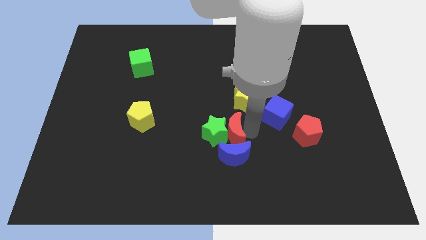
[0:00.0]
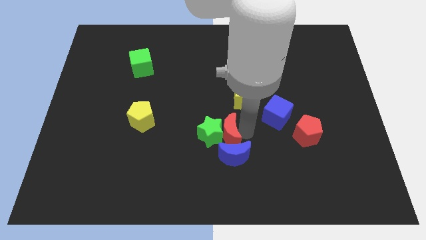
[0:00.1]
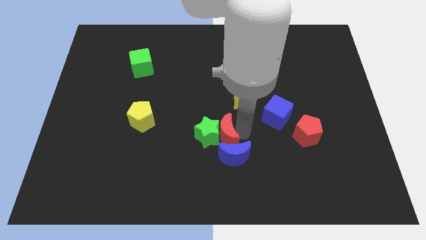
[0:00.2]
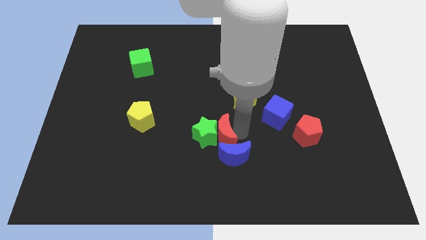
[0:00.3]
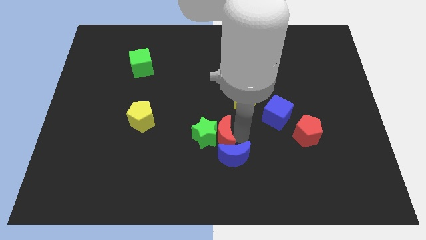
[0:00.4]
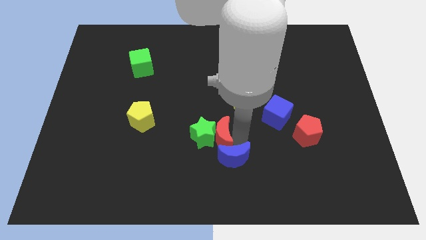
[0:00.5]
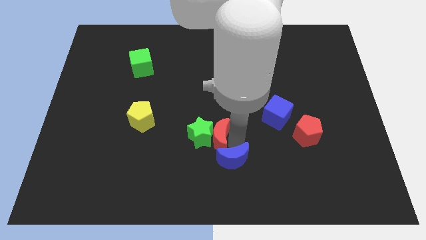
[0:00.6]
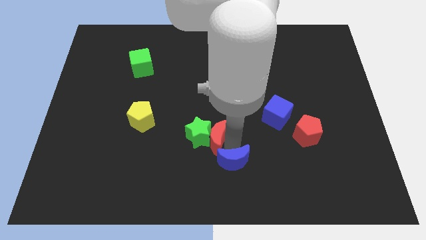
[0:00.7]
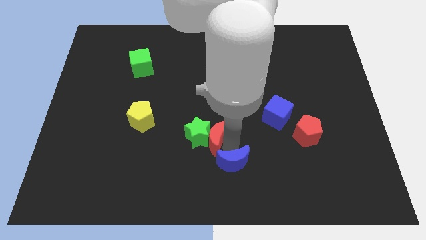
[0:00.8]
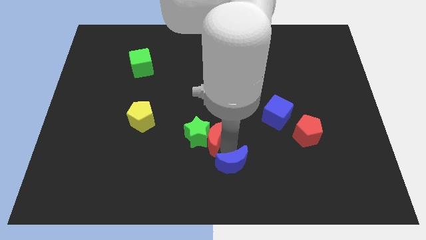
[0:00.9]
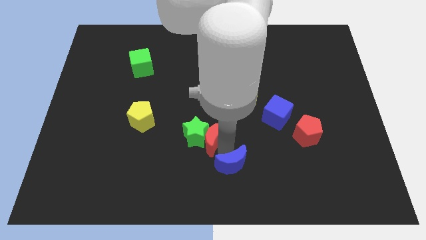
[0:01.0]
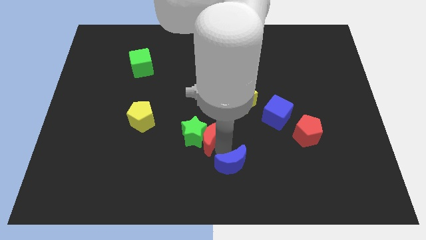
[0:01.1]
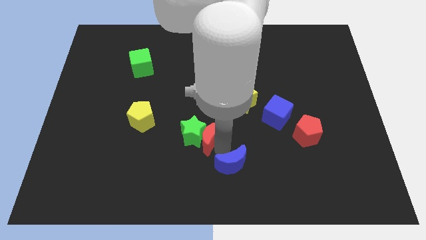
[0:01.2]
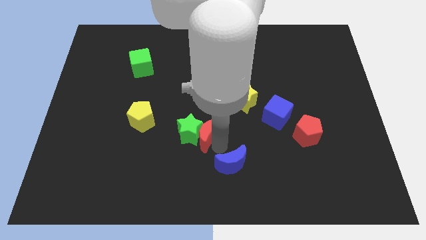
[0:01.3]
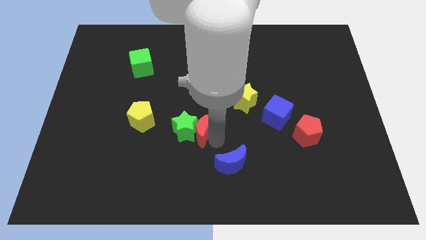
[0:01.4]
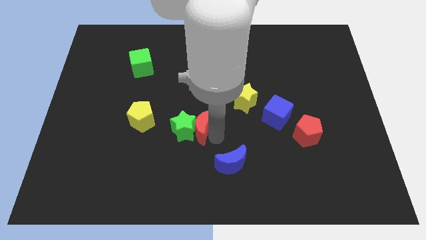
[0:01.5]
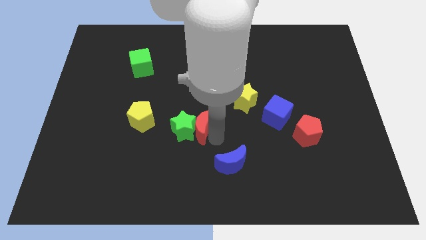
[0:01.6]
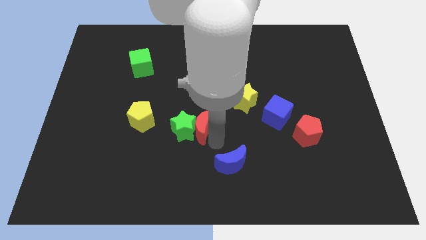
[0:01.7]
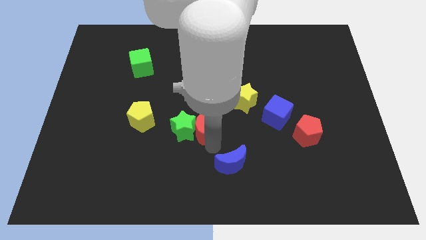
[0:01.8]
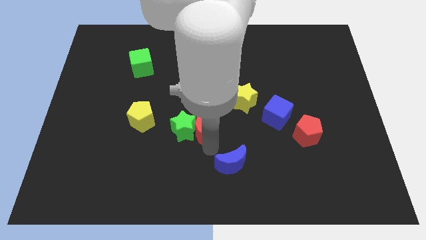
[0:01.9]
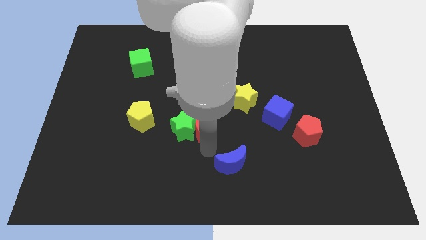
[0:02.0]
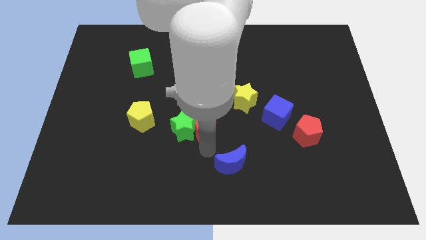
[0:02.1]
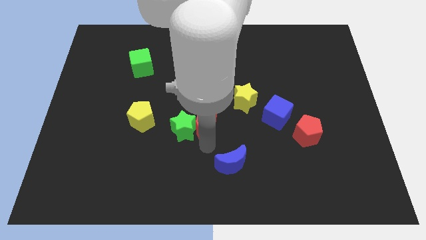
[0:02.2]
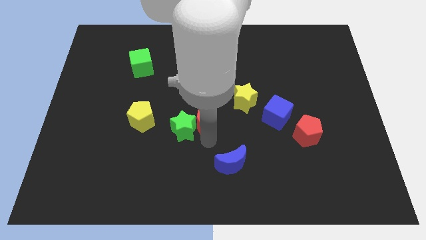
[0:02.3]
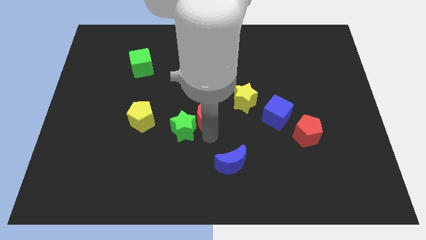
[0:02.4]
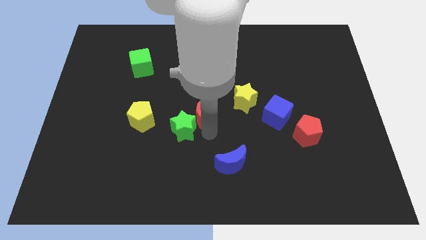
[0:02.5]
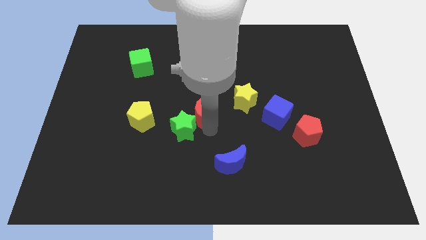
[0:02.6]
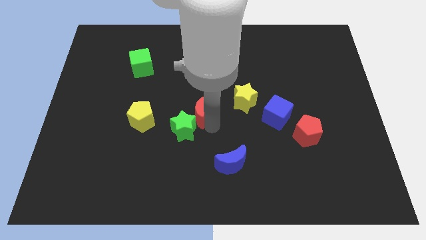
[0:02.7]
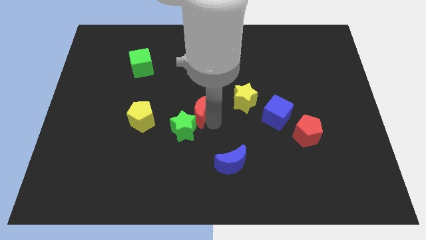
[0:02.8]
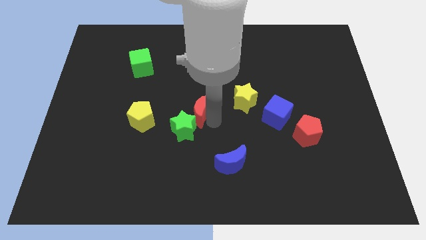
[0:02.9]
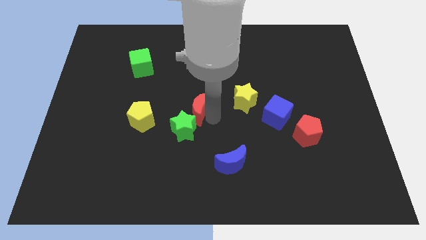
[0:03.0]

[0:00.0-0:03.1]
slide the red moon to the top right of the green star

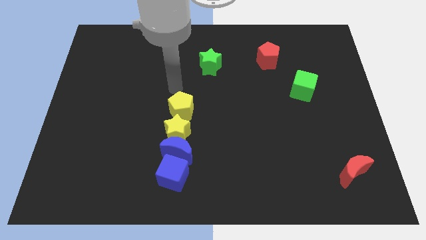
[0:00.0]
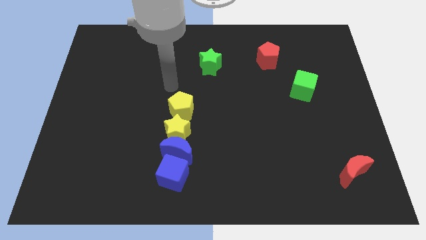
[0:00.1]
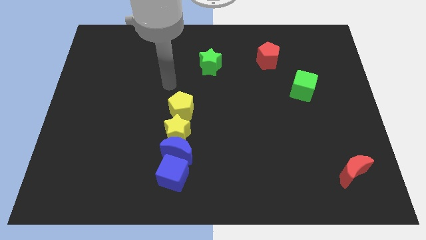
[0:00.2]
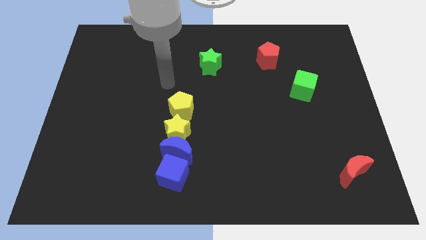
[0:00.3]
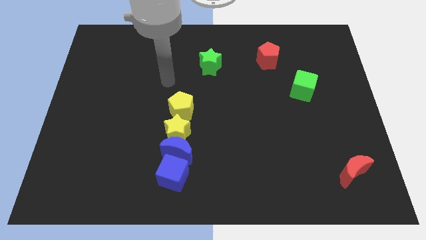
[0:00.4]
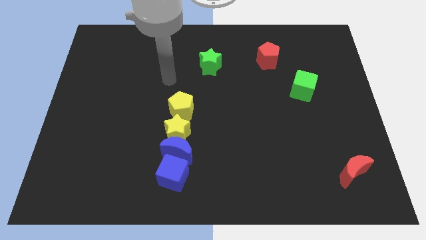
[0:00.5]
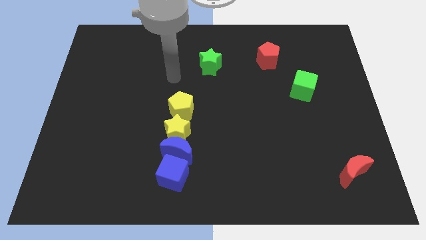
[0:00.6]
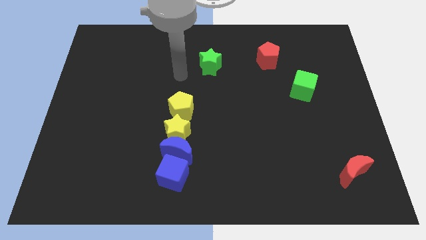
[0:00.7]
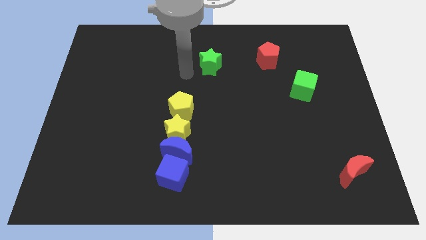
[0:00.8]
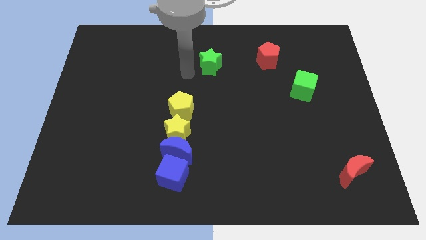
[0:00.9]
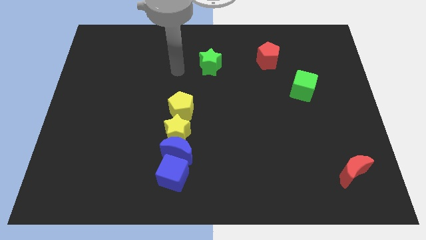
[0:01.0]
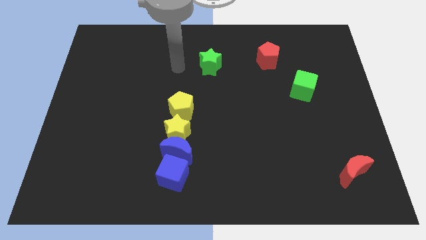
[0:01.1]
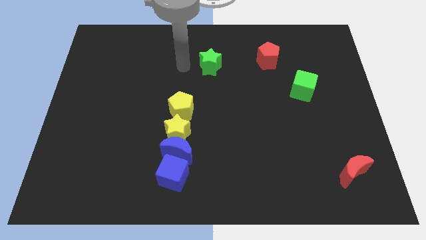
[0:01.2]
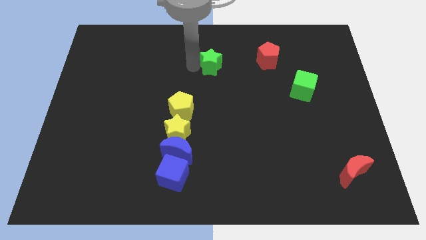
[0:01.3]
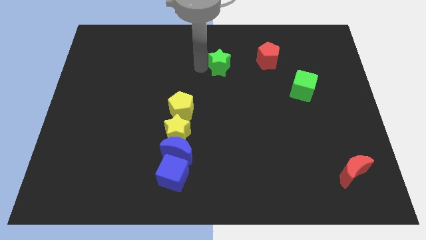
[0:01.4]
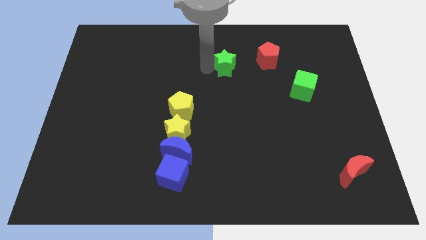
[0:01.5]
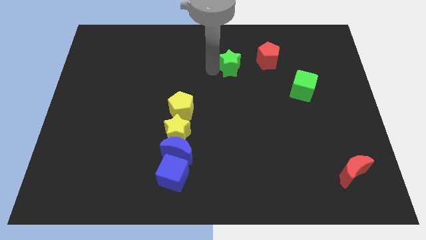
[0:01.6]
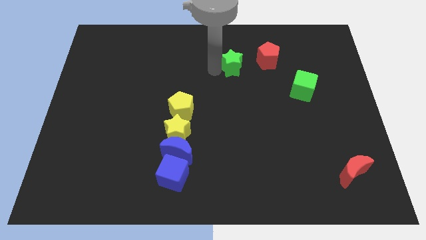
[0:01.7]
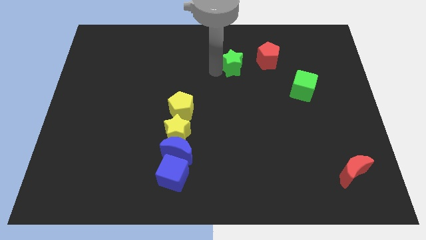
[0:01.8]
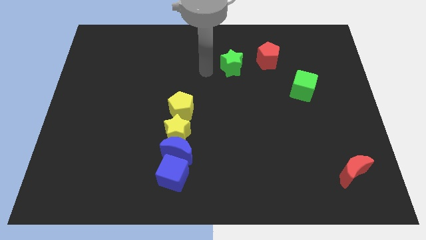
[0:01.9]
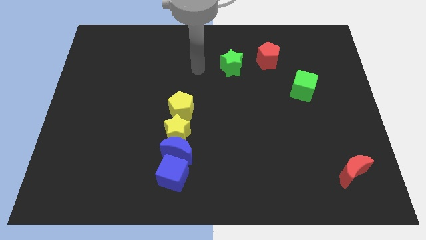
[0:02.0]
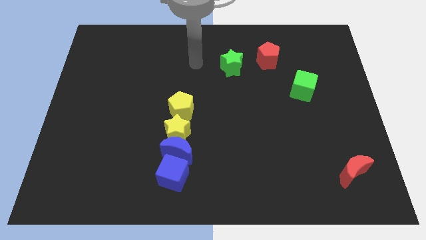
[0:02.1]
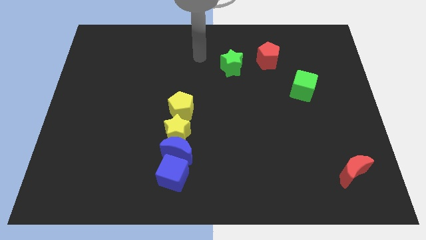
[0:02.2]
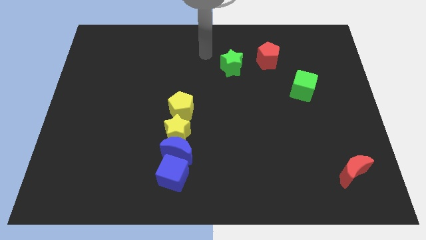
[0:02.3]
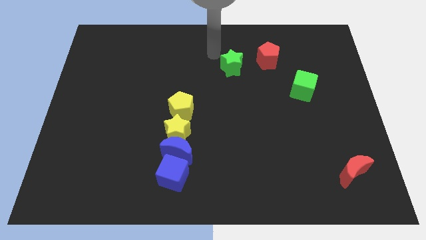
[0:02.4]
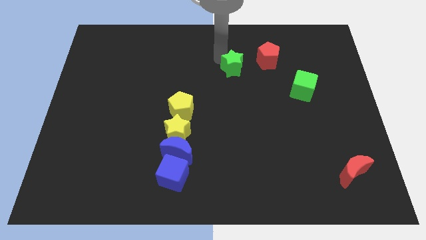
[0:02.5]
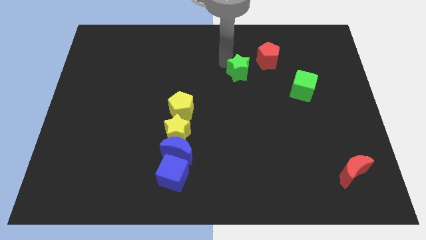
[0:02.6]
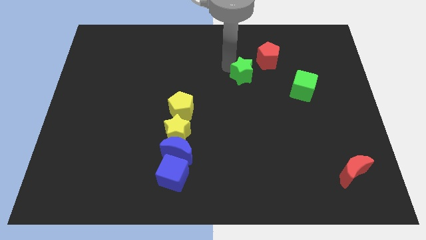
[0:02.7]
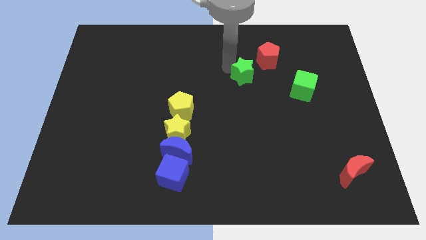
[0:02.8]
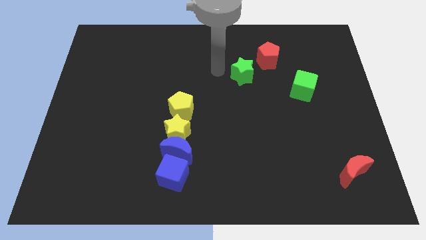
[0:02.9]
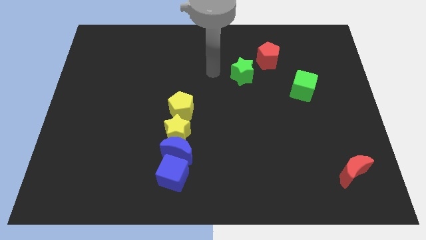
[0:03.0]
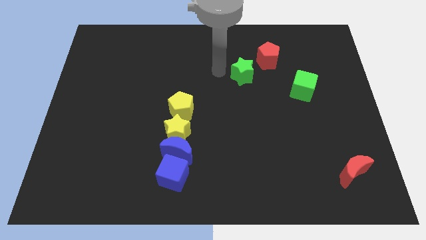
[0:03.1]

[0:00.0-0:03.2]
move the green star to the bottom left of the red pentagon

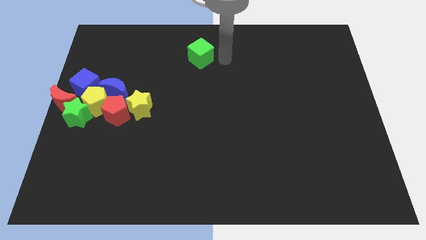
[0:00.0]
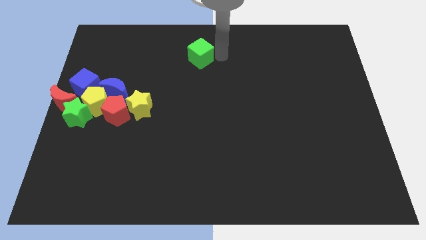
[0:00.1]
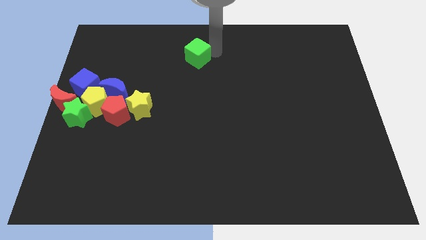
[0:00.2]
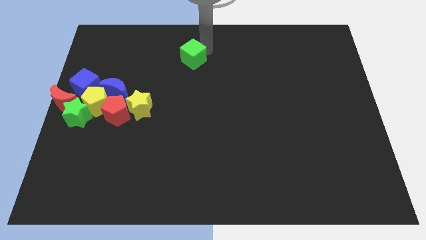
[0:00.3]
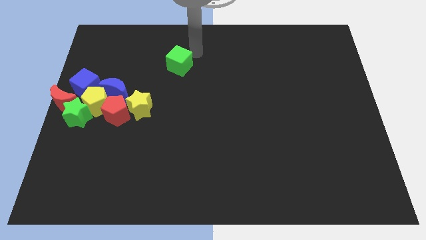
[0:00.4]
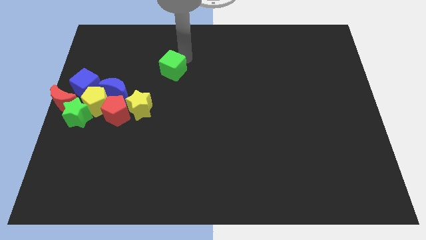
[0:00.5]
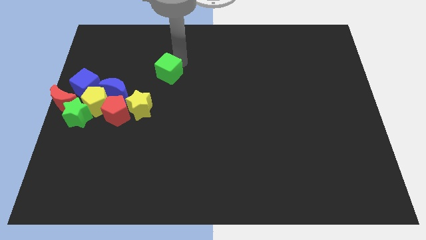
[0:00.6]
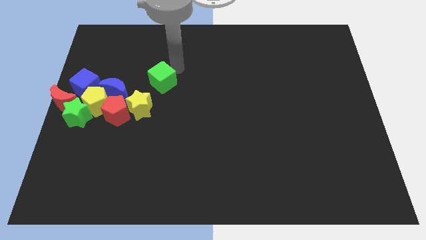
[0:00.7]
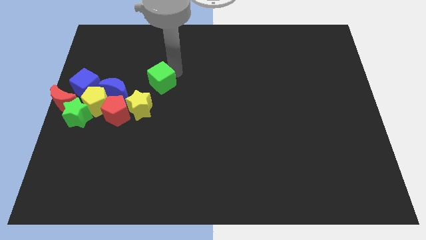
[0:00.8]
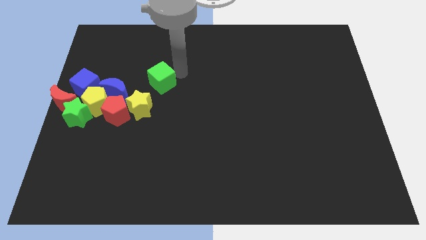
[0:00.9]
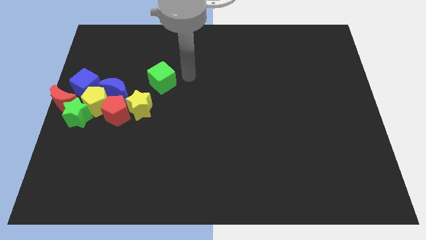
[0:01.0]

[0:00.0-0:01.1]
move the green cube to the top right of the yellow star

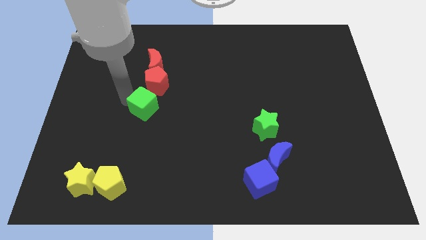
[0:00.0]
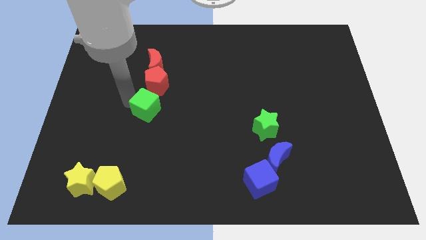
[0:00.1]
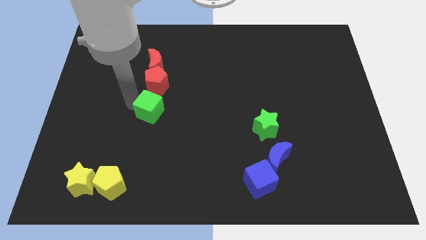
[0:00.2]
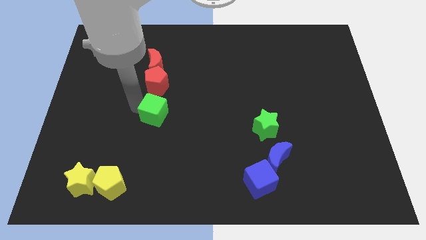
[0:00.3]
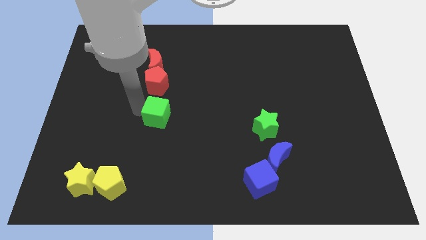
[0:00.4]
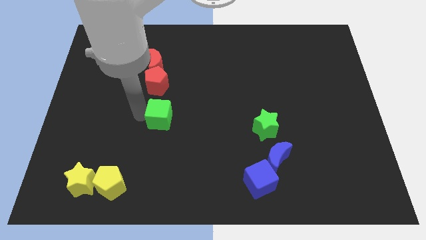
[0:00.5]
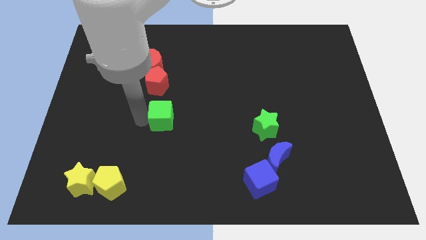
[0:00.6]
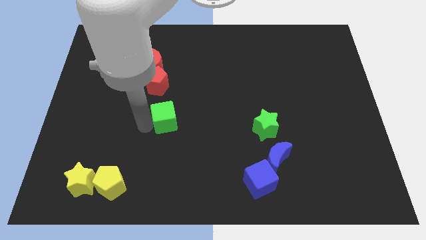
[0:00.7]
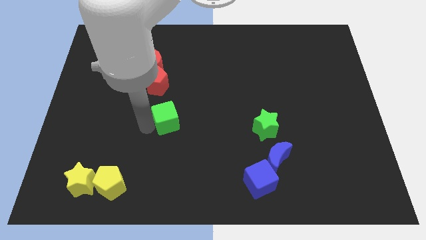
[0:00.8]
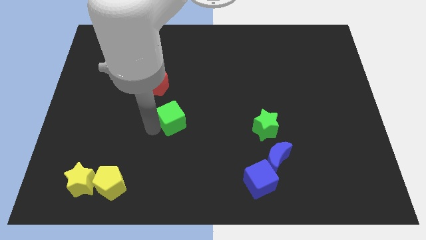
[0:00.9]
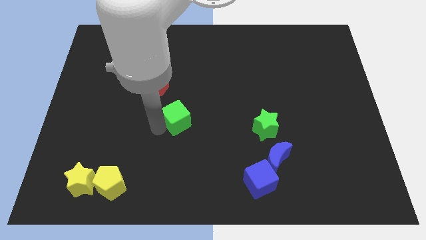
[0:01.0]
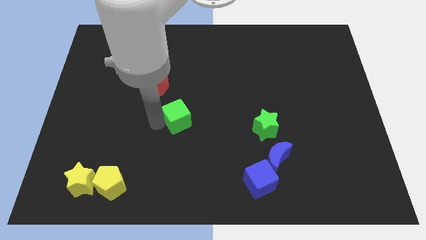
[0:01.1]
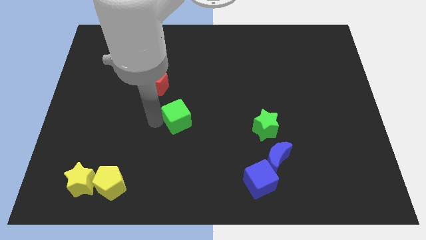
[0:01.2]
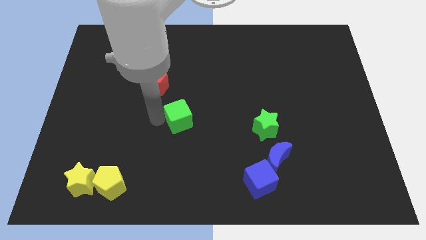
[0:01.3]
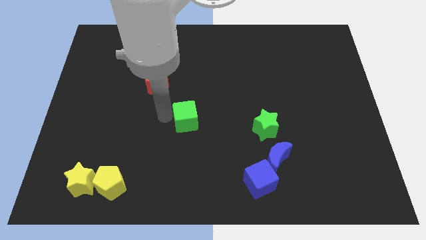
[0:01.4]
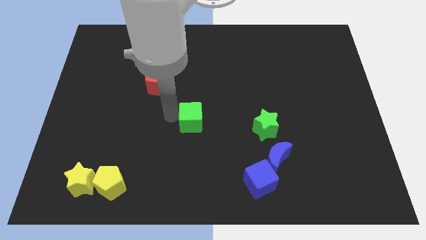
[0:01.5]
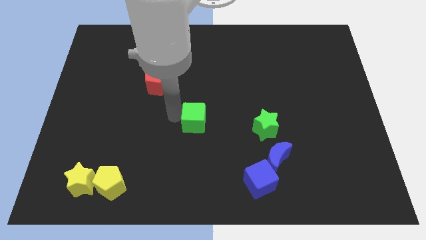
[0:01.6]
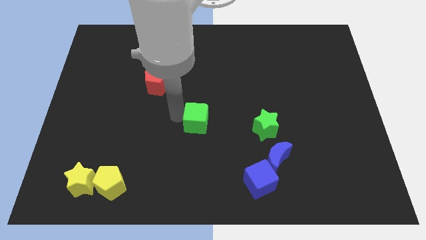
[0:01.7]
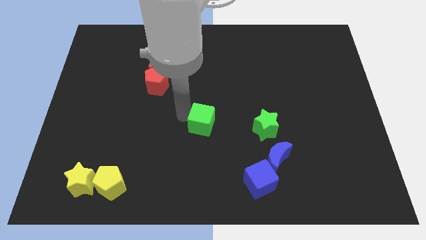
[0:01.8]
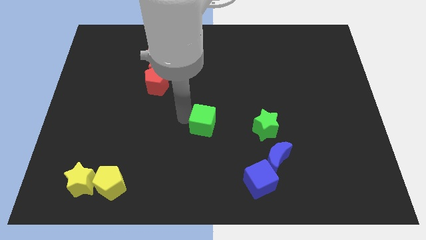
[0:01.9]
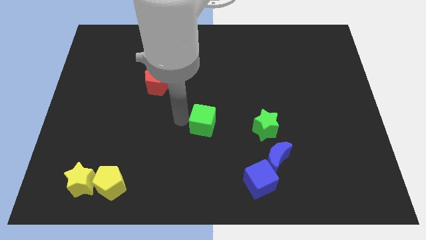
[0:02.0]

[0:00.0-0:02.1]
move the green cube diagonal to blue cube
